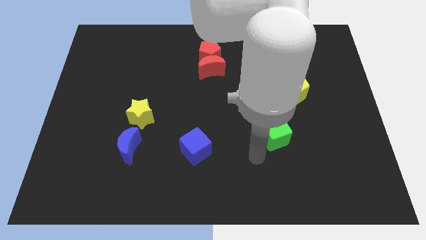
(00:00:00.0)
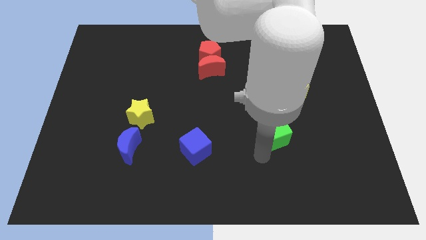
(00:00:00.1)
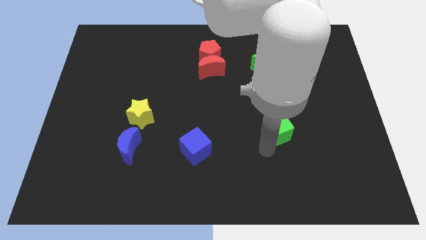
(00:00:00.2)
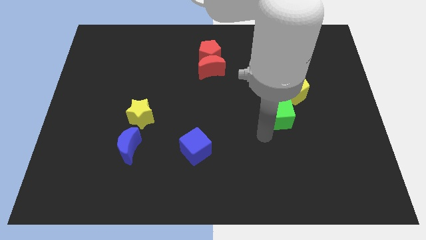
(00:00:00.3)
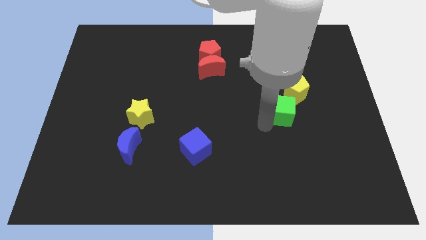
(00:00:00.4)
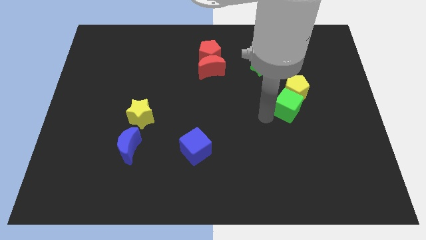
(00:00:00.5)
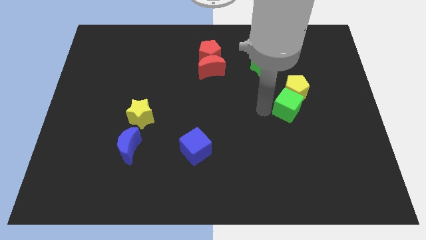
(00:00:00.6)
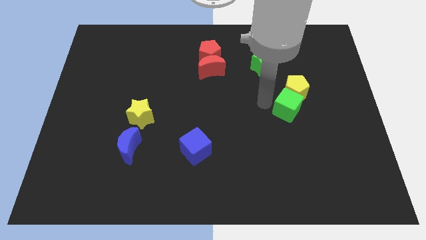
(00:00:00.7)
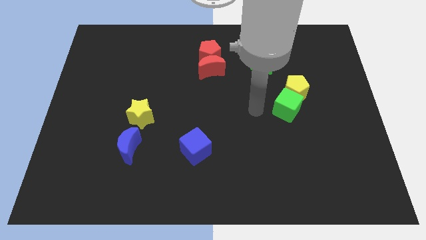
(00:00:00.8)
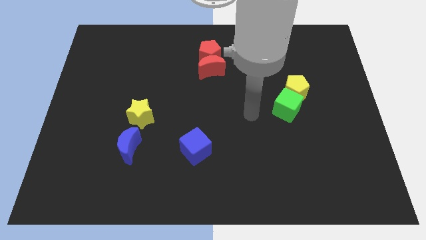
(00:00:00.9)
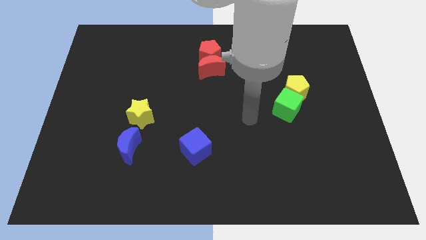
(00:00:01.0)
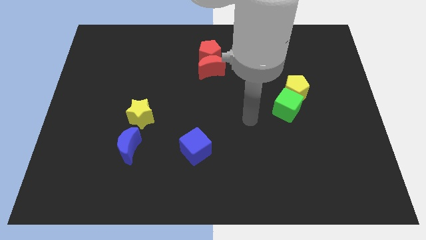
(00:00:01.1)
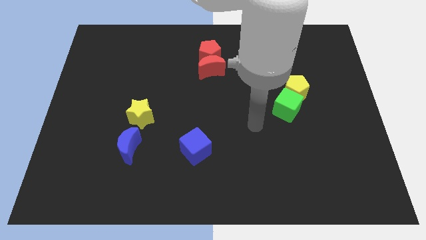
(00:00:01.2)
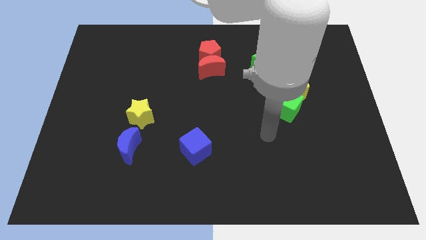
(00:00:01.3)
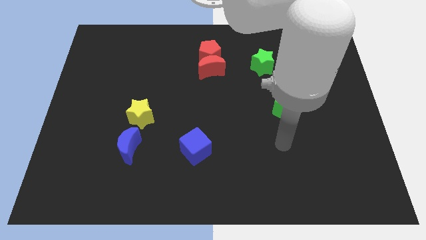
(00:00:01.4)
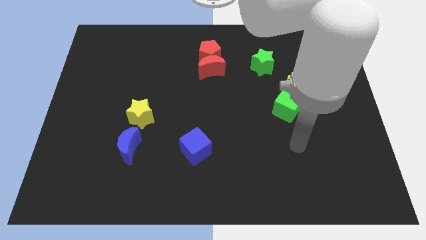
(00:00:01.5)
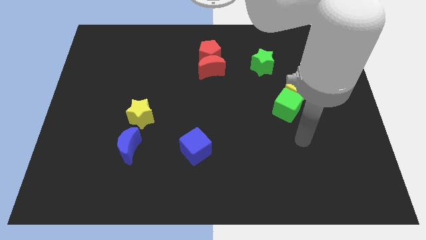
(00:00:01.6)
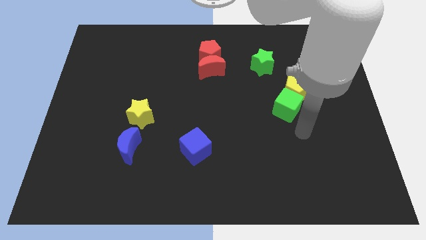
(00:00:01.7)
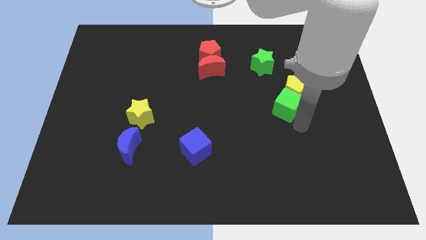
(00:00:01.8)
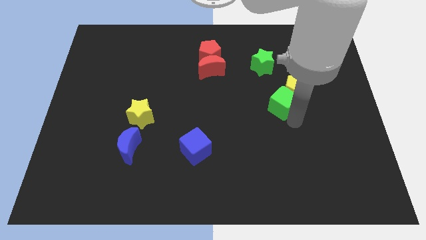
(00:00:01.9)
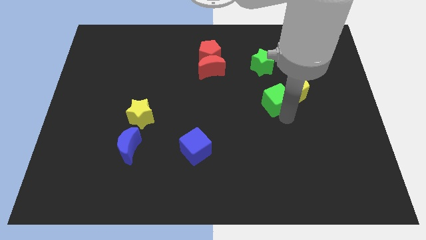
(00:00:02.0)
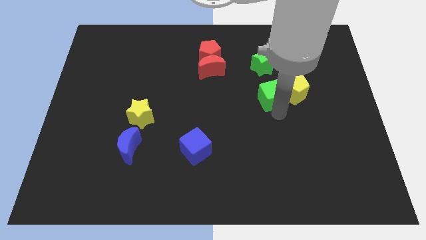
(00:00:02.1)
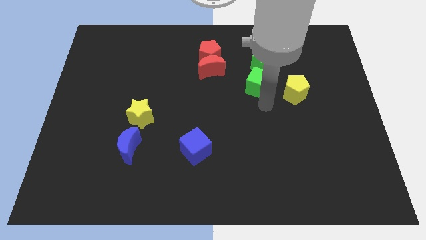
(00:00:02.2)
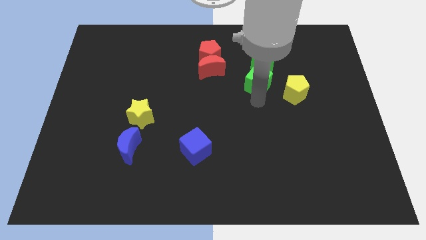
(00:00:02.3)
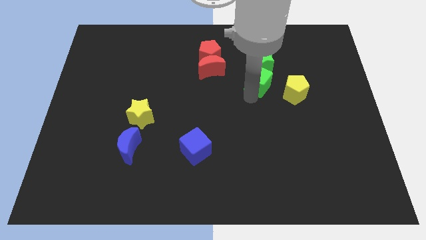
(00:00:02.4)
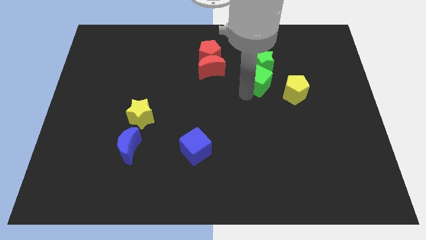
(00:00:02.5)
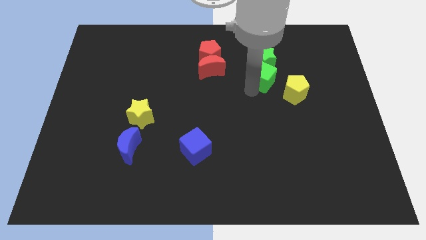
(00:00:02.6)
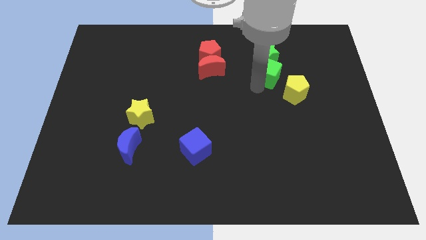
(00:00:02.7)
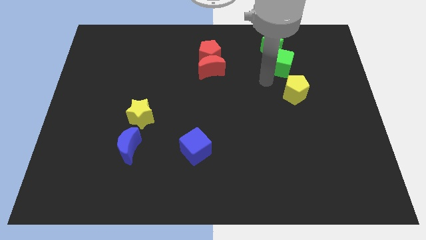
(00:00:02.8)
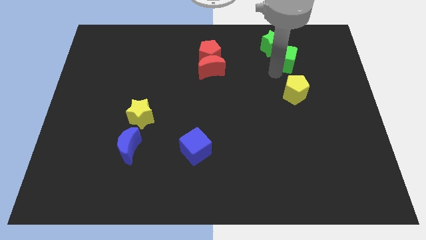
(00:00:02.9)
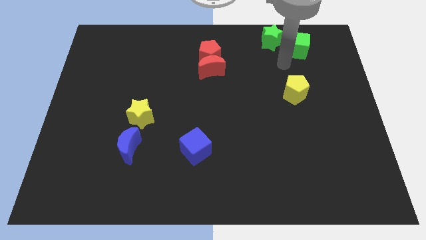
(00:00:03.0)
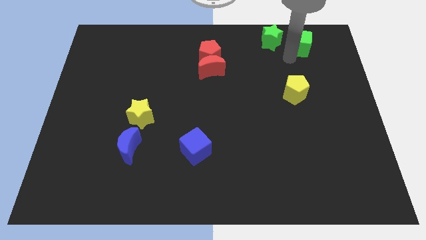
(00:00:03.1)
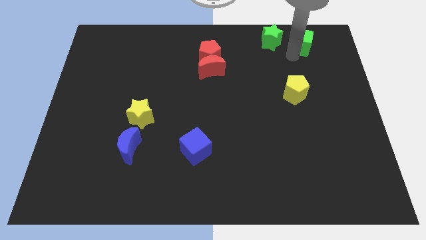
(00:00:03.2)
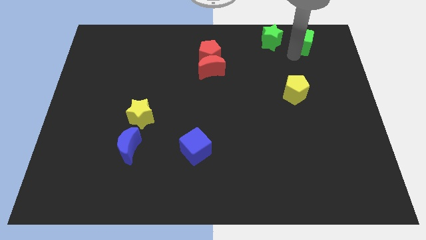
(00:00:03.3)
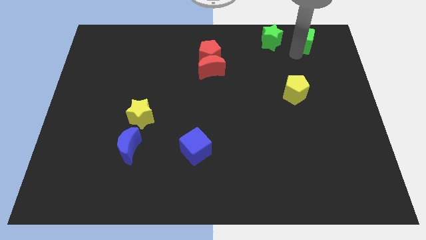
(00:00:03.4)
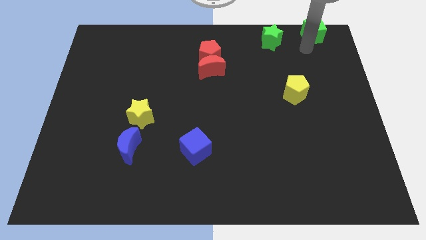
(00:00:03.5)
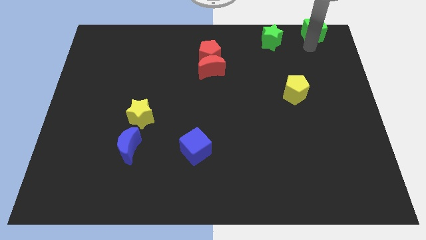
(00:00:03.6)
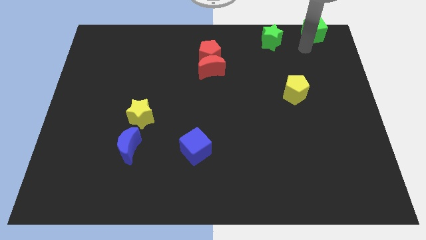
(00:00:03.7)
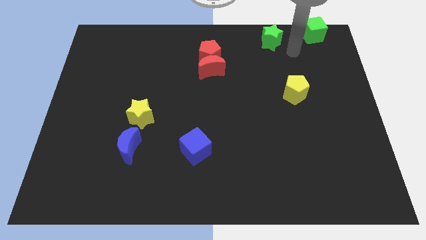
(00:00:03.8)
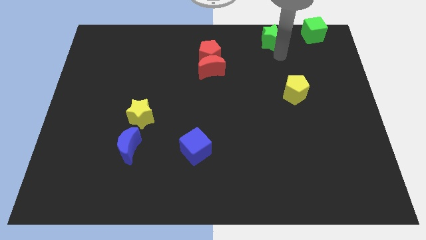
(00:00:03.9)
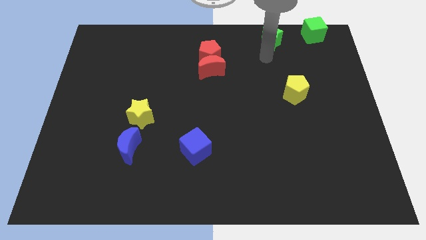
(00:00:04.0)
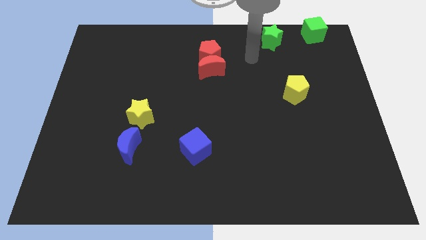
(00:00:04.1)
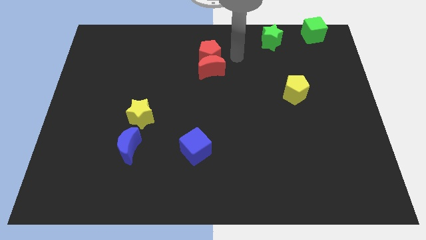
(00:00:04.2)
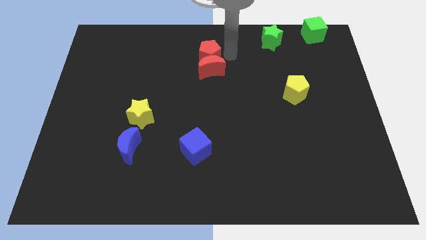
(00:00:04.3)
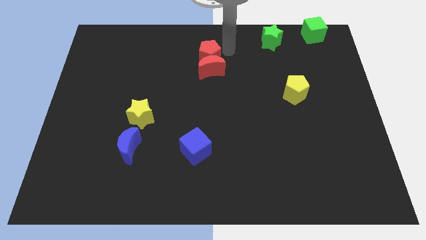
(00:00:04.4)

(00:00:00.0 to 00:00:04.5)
place the green cube above the yellow pentagon

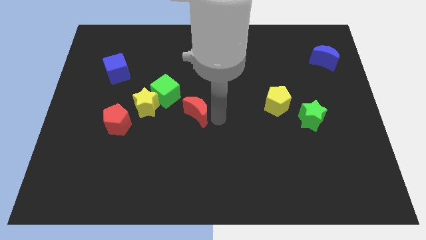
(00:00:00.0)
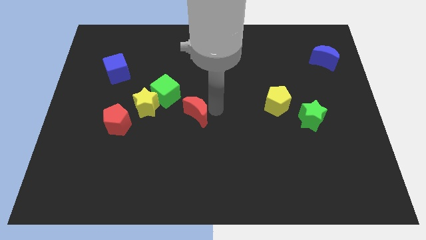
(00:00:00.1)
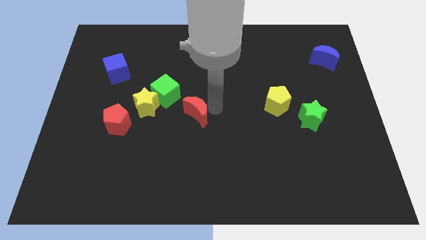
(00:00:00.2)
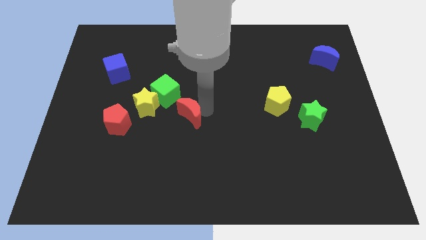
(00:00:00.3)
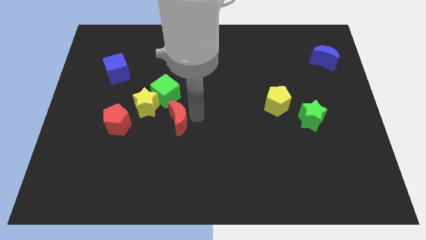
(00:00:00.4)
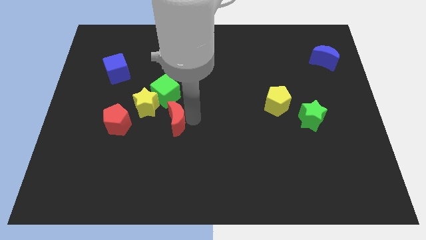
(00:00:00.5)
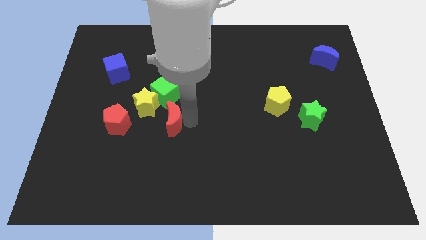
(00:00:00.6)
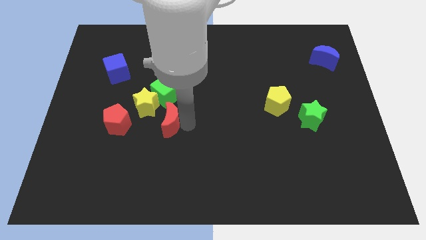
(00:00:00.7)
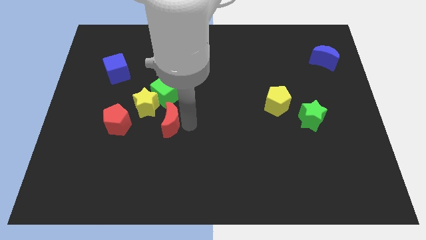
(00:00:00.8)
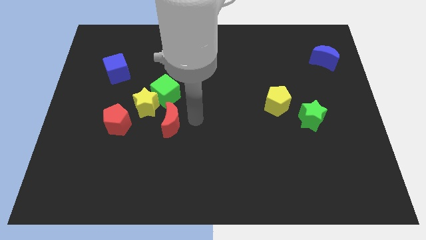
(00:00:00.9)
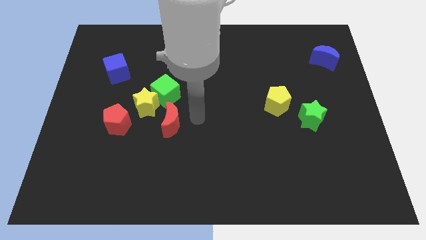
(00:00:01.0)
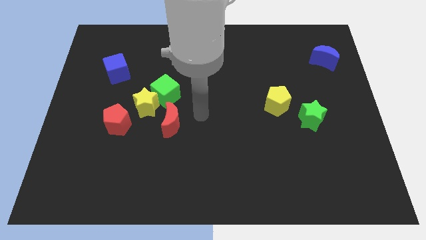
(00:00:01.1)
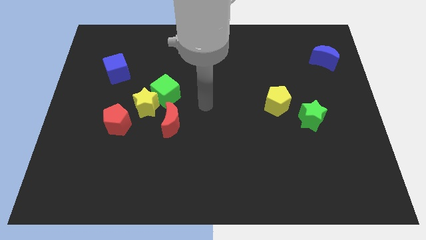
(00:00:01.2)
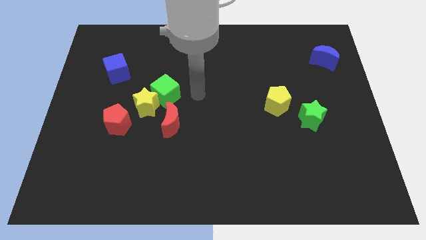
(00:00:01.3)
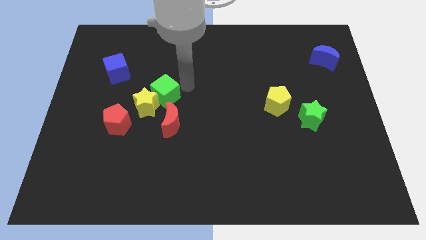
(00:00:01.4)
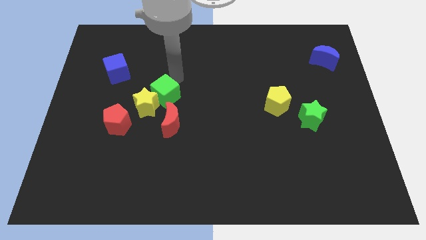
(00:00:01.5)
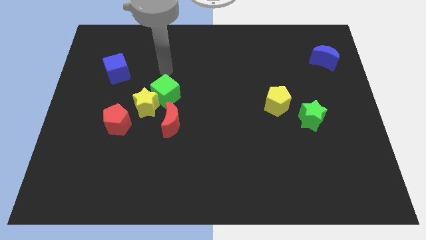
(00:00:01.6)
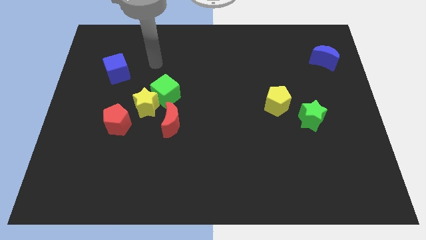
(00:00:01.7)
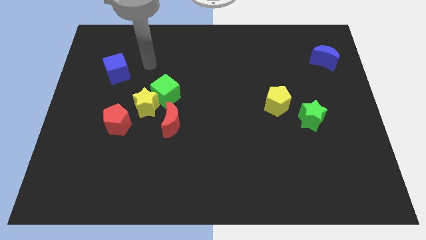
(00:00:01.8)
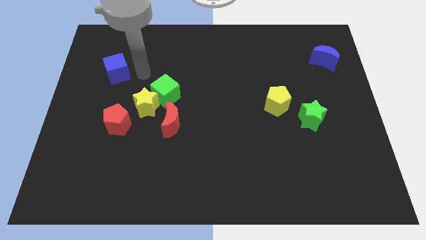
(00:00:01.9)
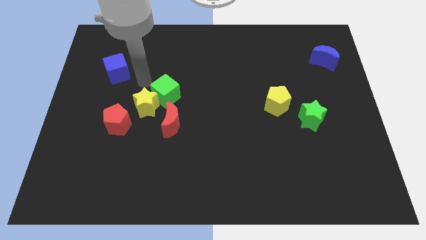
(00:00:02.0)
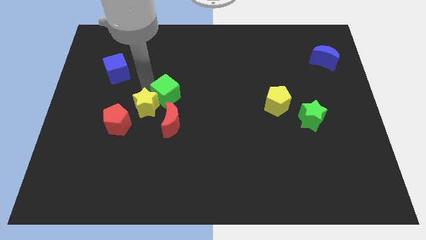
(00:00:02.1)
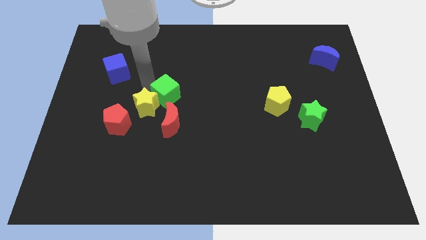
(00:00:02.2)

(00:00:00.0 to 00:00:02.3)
push the red moon below the green cube

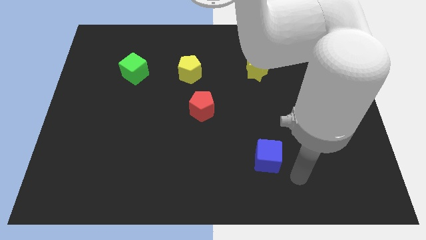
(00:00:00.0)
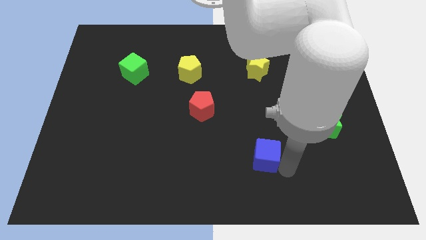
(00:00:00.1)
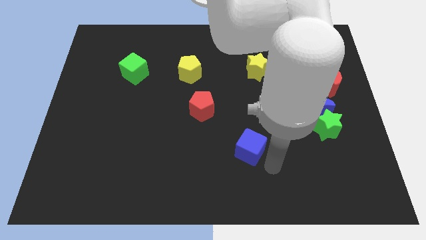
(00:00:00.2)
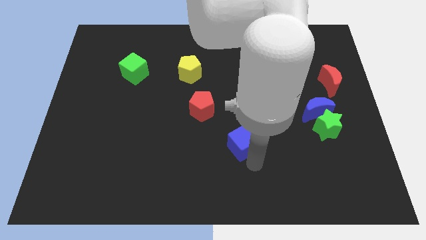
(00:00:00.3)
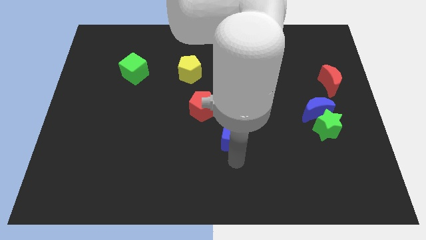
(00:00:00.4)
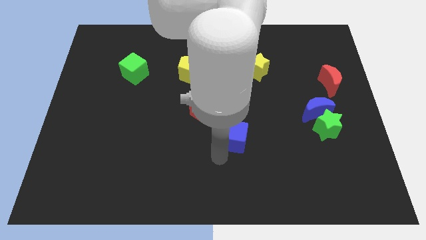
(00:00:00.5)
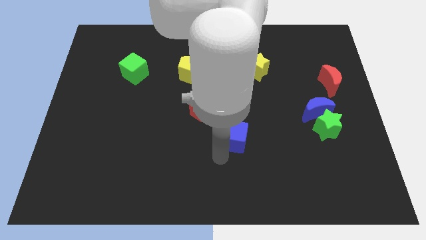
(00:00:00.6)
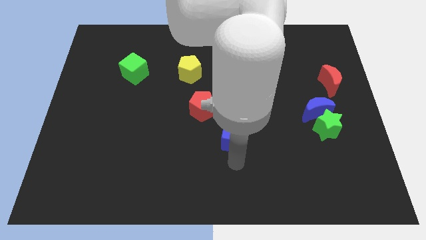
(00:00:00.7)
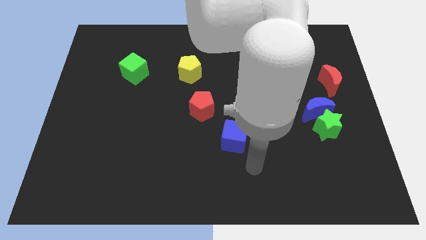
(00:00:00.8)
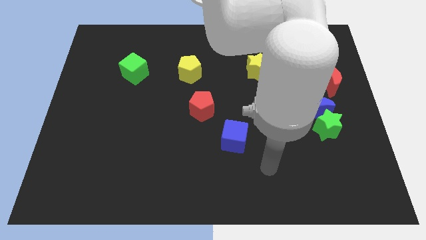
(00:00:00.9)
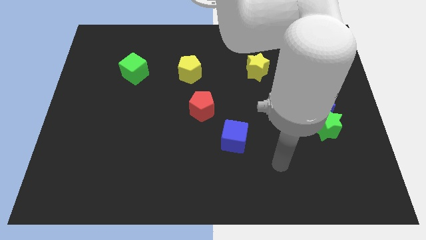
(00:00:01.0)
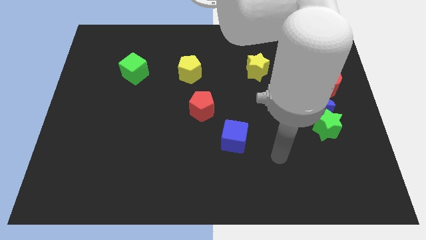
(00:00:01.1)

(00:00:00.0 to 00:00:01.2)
move the blue cube to the bottom center of the board

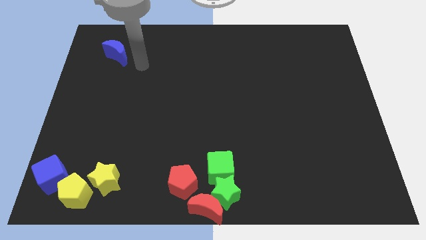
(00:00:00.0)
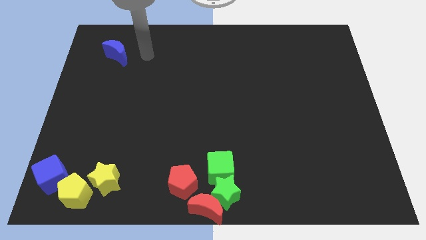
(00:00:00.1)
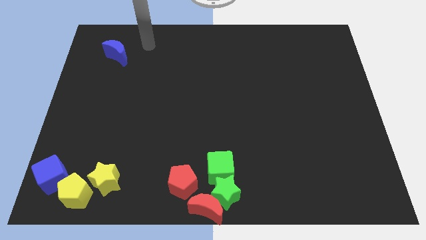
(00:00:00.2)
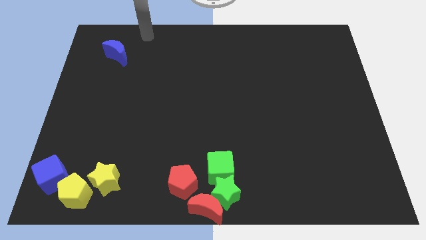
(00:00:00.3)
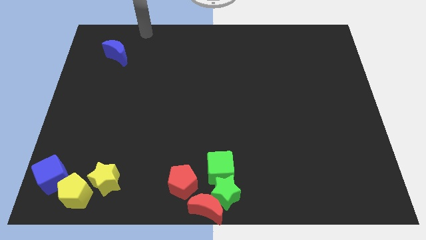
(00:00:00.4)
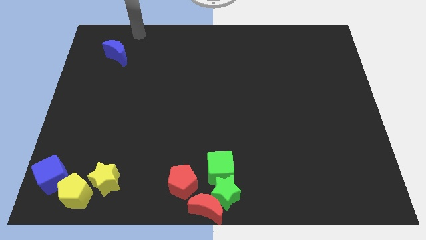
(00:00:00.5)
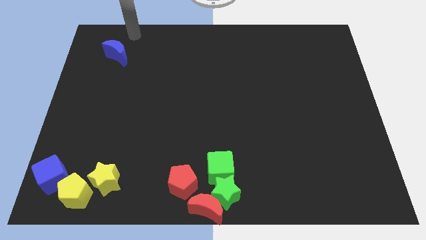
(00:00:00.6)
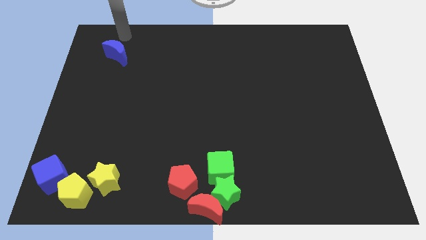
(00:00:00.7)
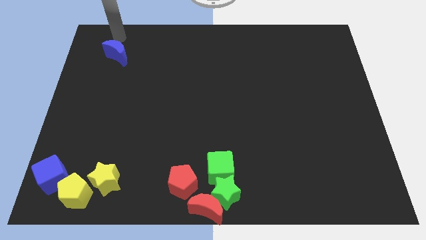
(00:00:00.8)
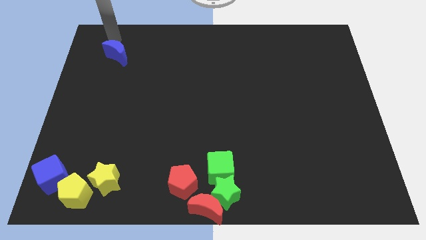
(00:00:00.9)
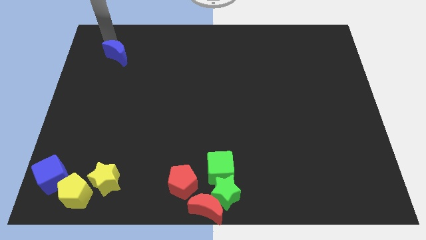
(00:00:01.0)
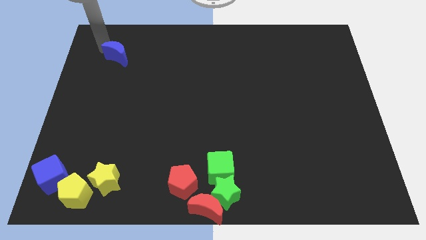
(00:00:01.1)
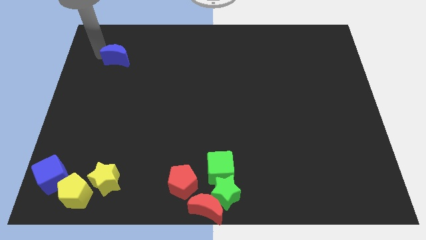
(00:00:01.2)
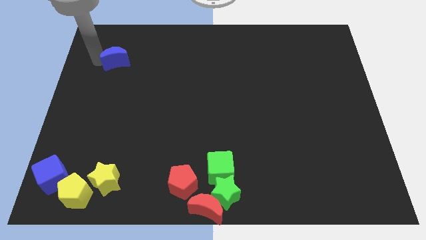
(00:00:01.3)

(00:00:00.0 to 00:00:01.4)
place your arm above blue moon
